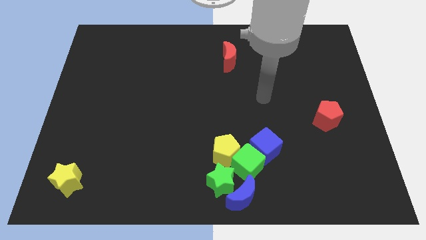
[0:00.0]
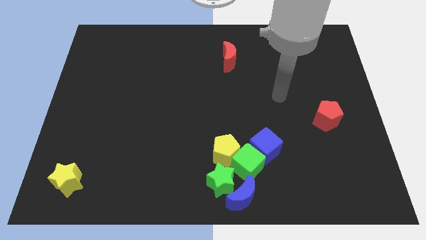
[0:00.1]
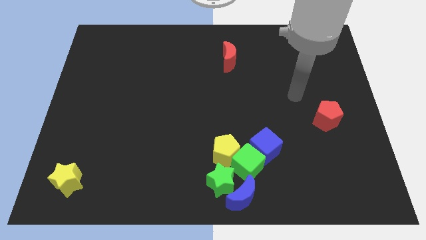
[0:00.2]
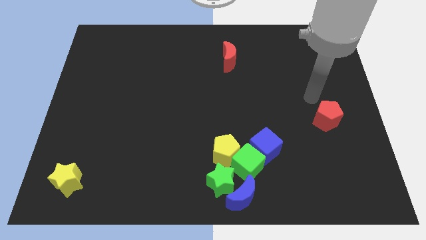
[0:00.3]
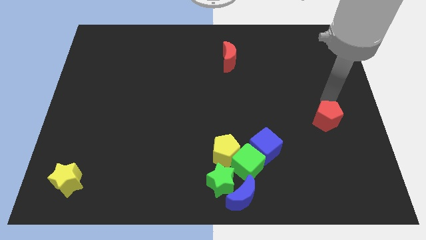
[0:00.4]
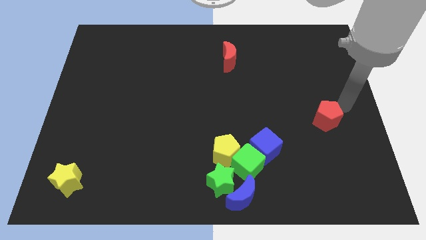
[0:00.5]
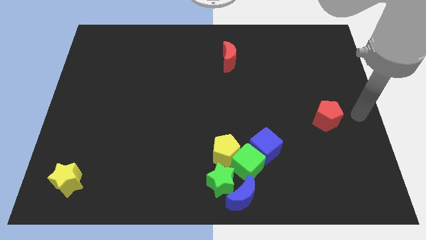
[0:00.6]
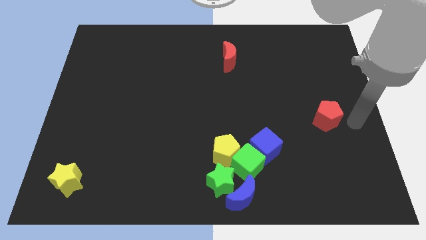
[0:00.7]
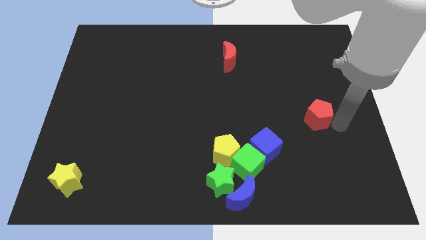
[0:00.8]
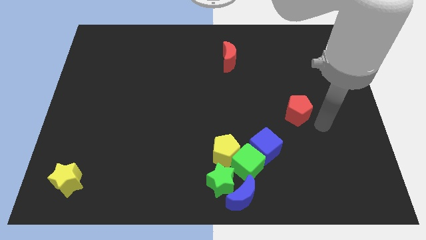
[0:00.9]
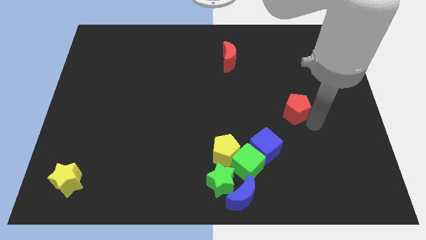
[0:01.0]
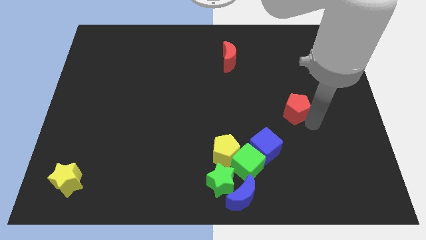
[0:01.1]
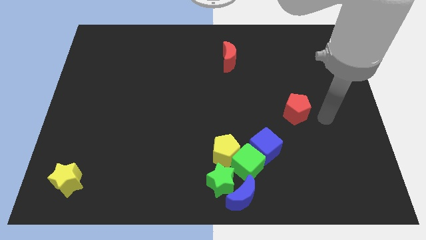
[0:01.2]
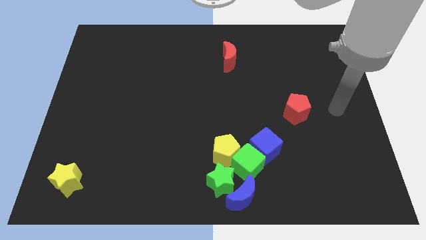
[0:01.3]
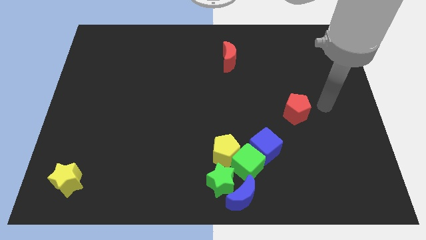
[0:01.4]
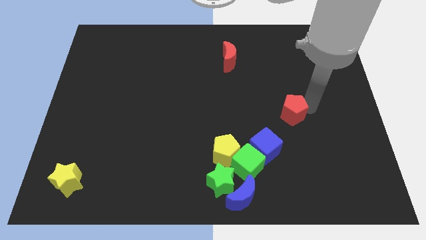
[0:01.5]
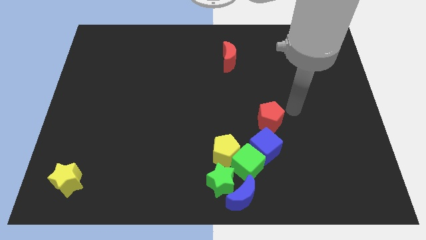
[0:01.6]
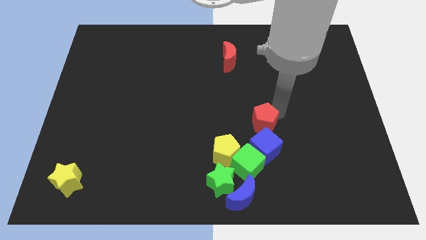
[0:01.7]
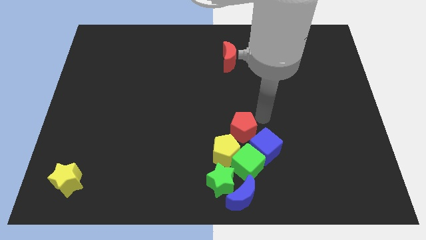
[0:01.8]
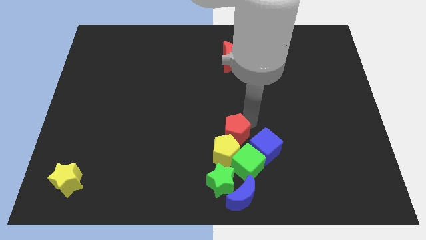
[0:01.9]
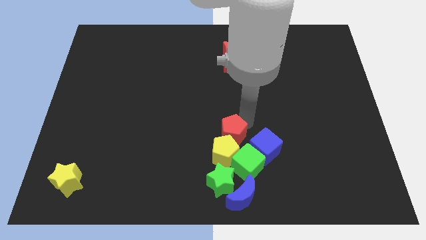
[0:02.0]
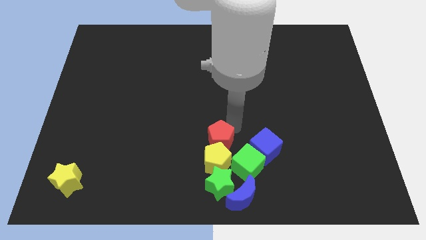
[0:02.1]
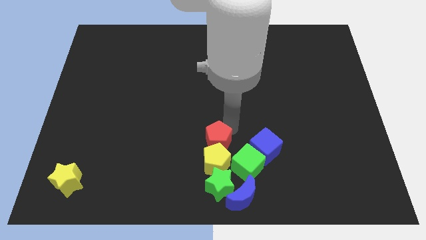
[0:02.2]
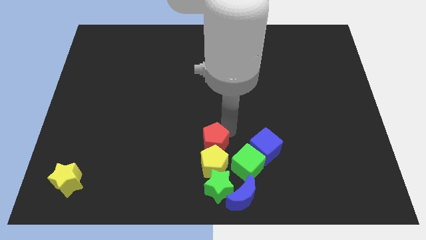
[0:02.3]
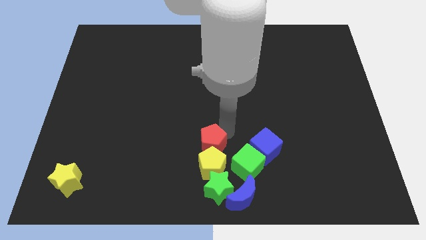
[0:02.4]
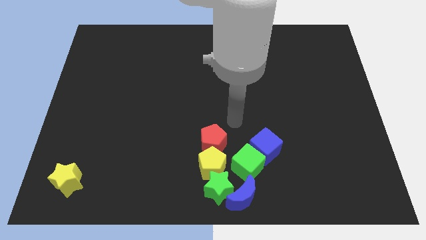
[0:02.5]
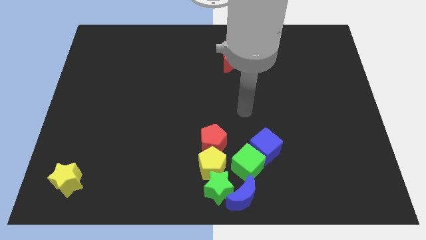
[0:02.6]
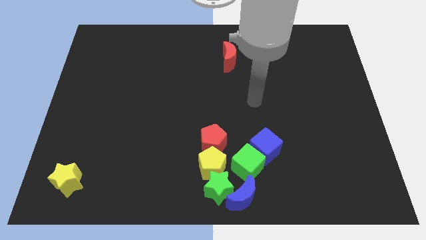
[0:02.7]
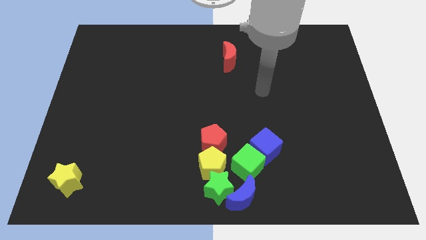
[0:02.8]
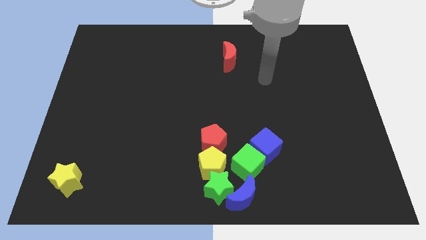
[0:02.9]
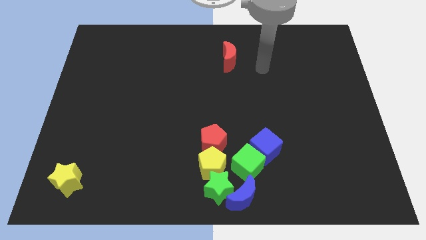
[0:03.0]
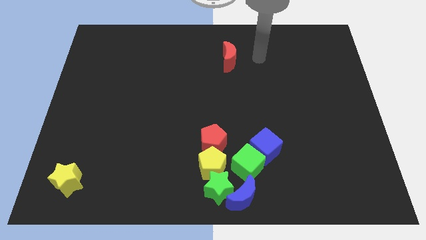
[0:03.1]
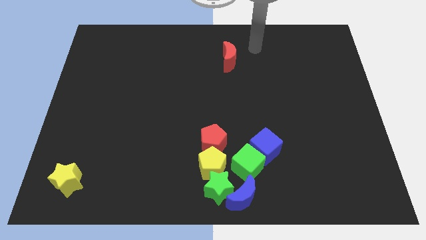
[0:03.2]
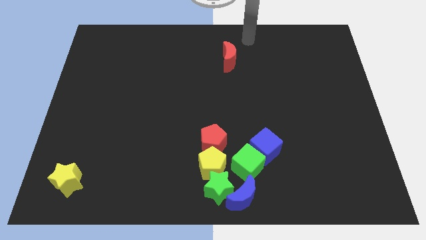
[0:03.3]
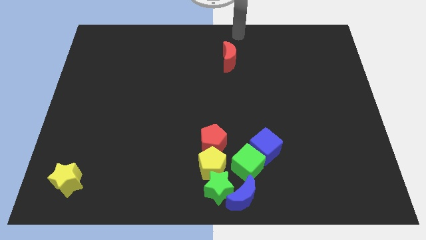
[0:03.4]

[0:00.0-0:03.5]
move red pentagon to the top side of the yellow pentagon

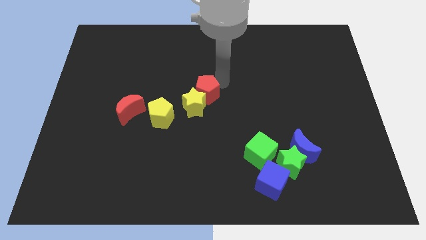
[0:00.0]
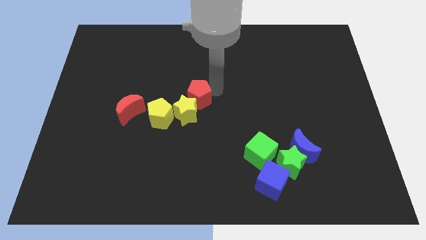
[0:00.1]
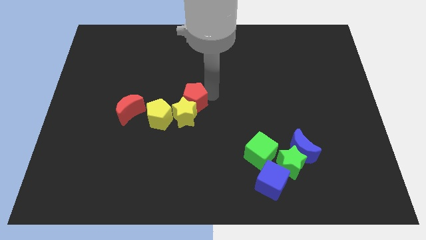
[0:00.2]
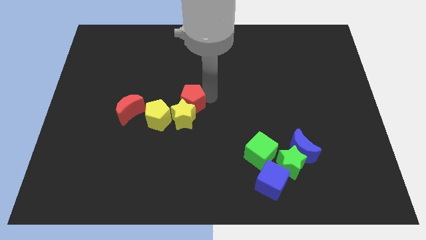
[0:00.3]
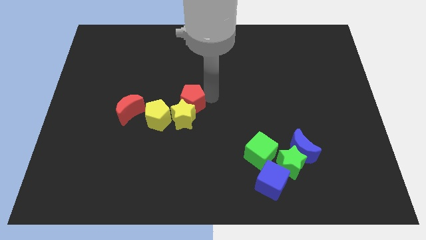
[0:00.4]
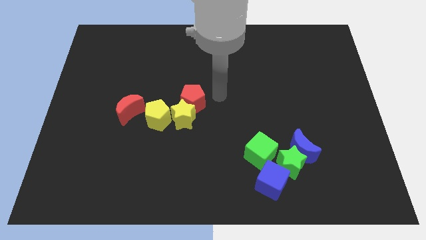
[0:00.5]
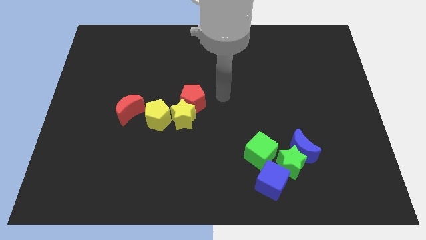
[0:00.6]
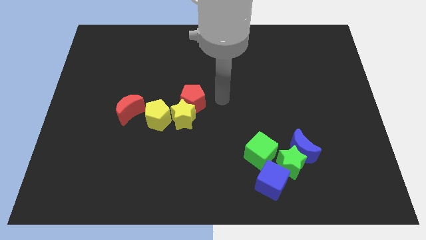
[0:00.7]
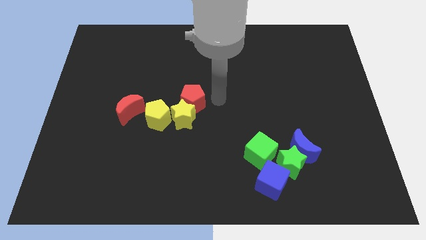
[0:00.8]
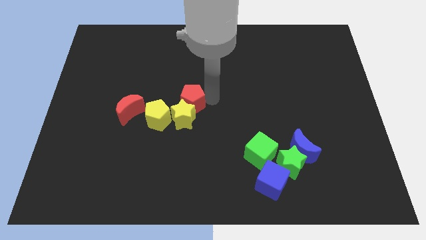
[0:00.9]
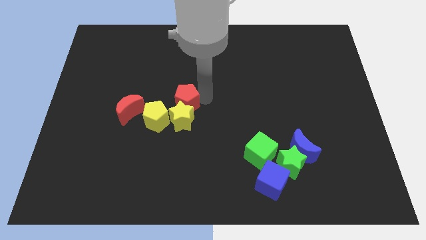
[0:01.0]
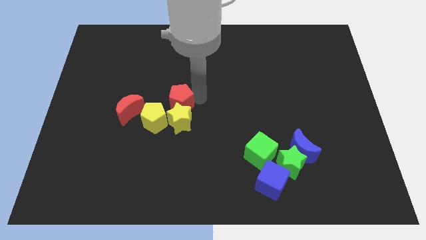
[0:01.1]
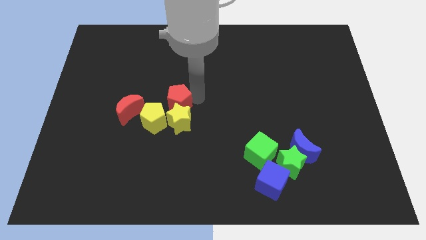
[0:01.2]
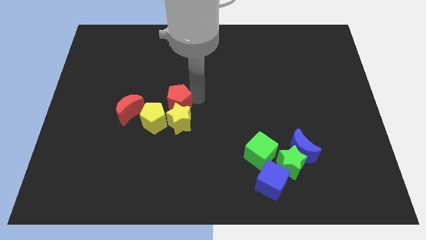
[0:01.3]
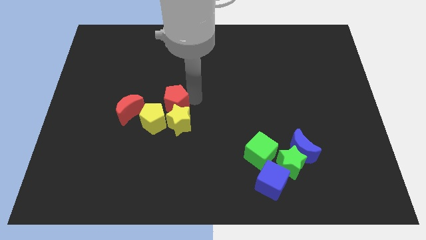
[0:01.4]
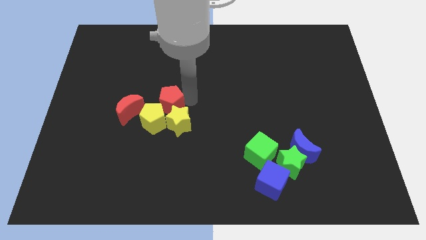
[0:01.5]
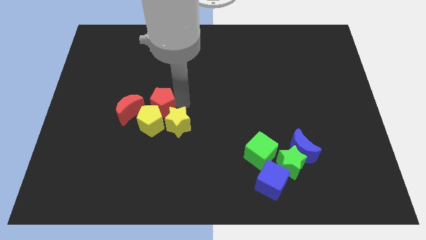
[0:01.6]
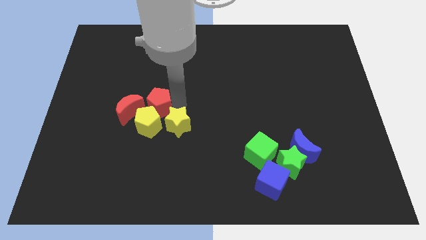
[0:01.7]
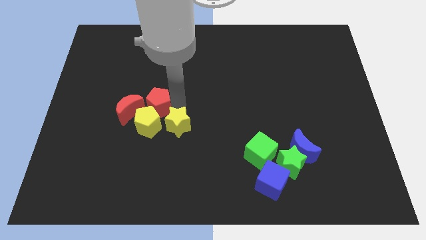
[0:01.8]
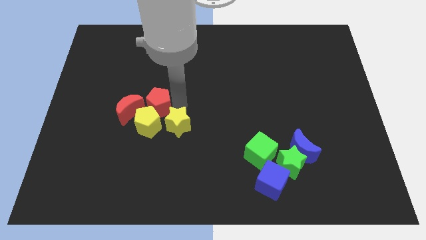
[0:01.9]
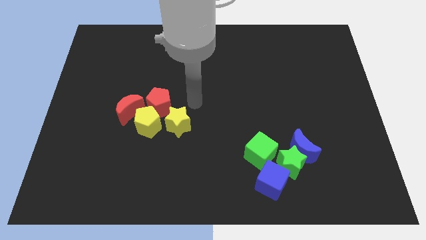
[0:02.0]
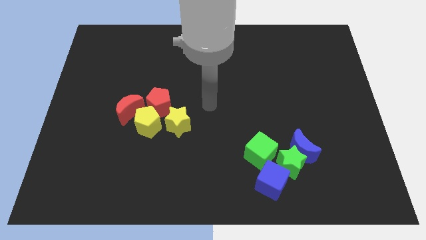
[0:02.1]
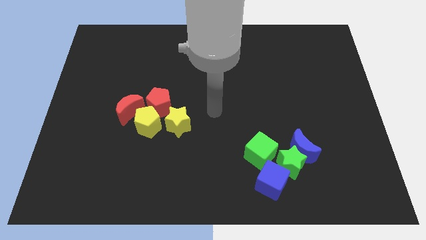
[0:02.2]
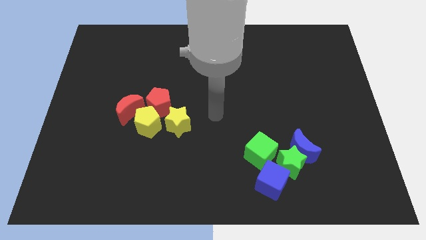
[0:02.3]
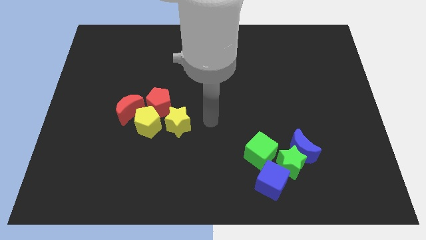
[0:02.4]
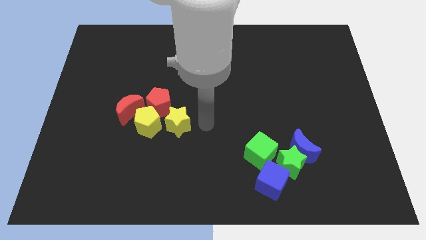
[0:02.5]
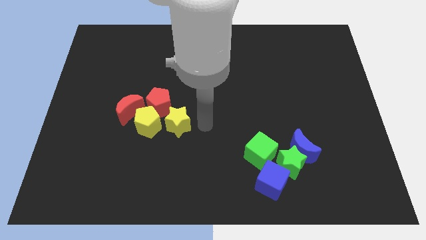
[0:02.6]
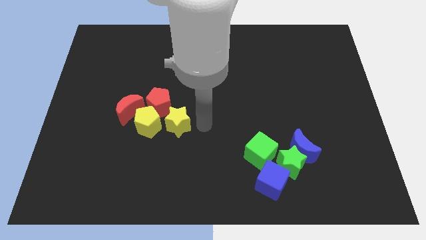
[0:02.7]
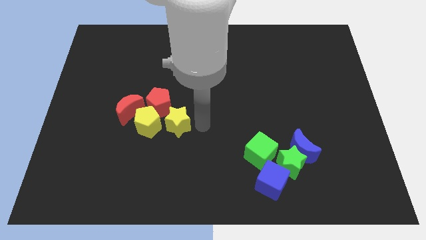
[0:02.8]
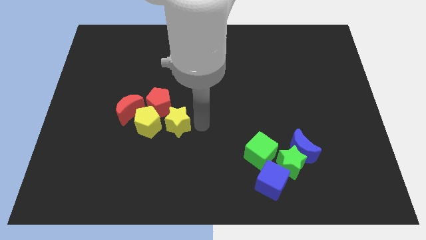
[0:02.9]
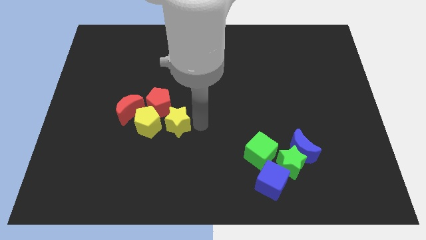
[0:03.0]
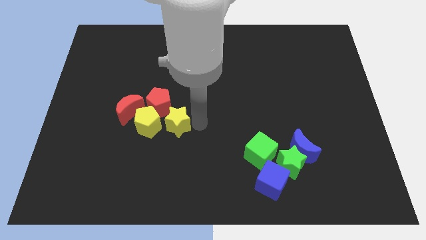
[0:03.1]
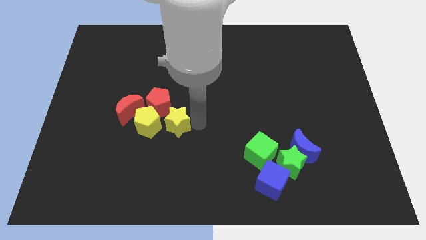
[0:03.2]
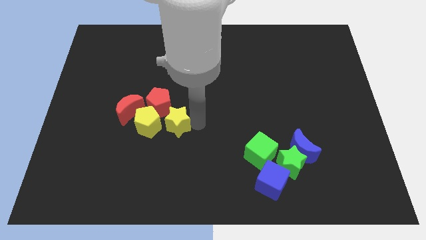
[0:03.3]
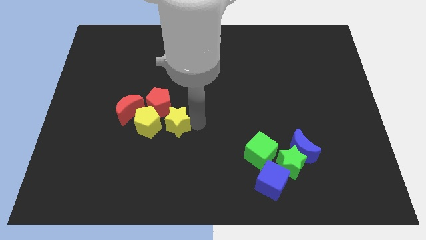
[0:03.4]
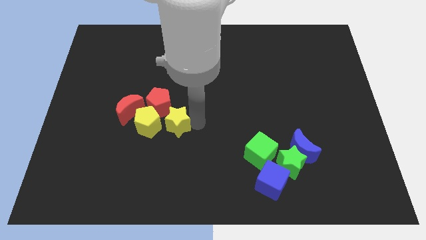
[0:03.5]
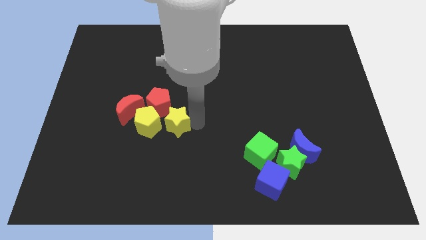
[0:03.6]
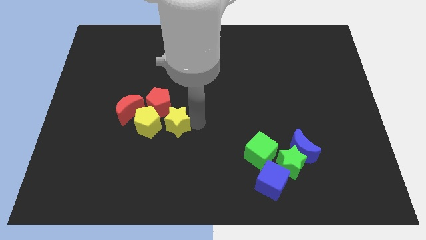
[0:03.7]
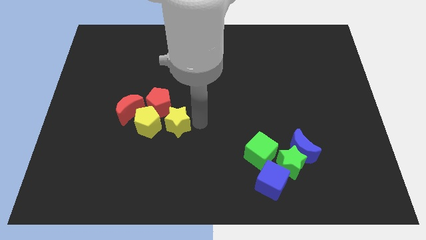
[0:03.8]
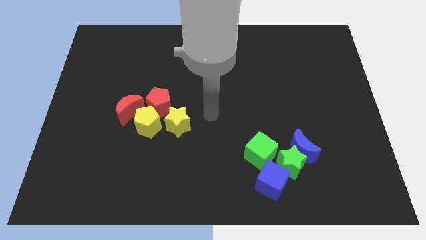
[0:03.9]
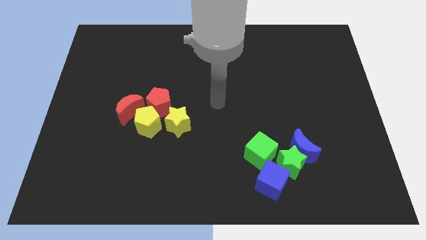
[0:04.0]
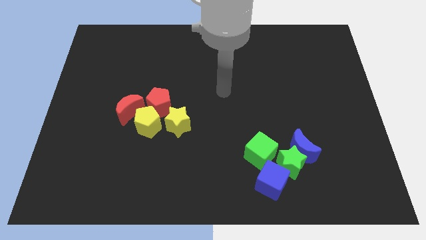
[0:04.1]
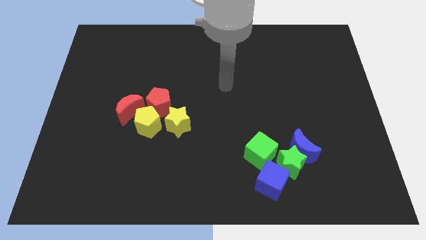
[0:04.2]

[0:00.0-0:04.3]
put the red blocks diagonal to the yellow blocks

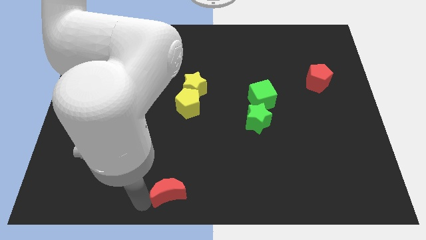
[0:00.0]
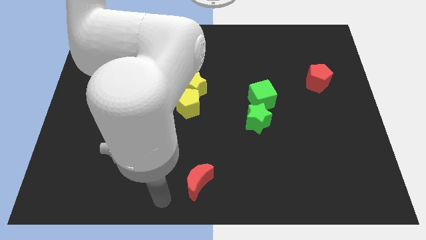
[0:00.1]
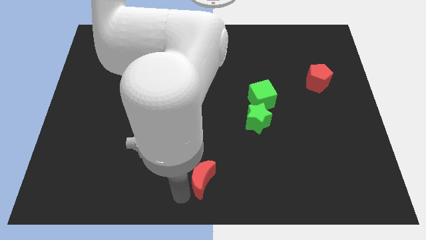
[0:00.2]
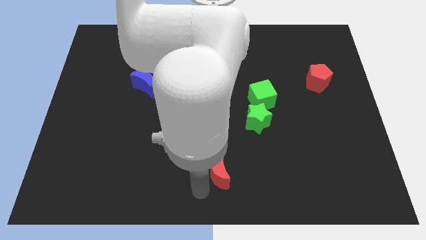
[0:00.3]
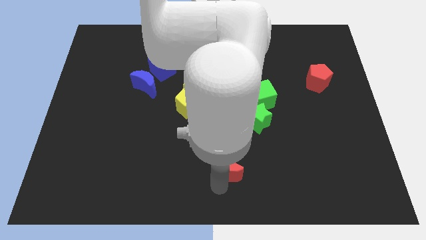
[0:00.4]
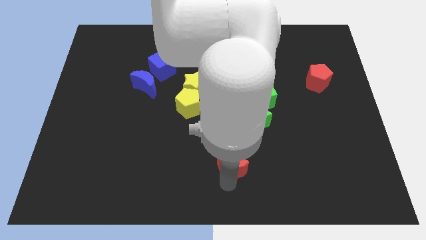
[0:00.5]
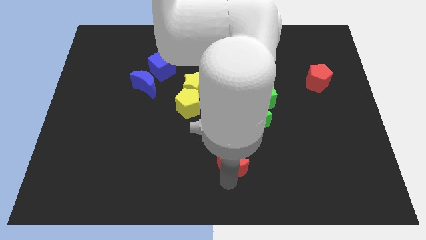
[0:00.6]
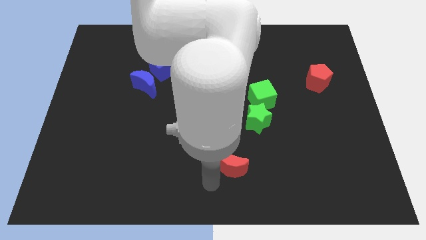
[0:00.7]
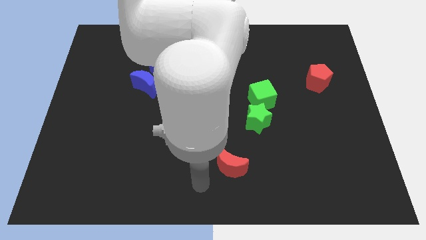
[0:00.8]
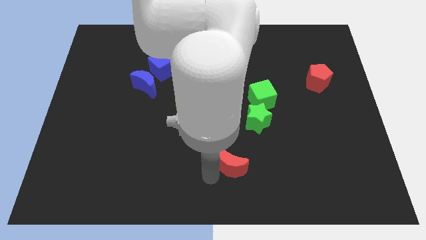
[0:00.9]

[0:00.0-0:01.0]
push the red moon towards the green star

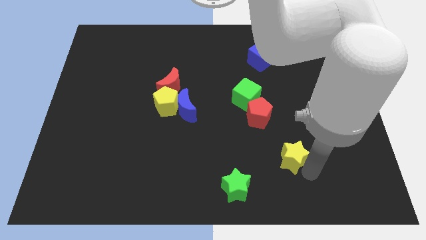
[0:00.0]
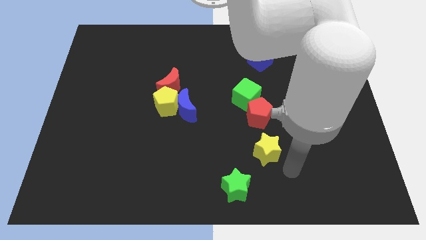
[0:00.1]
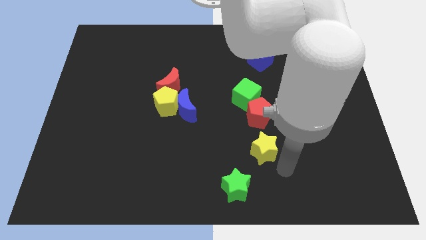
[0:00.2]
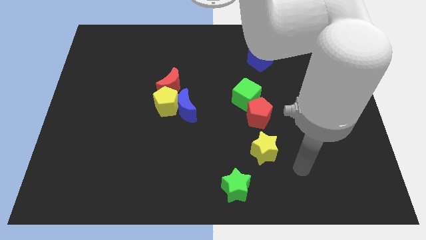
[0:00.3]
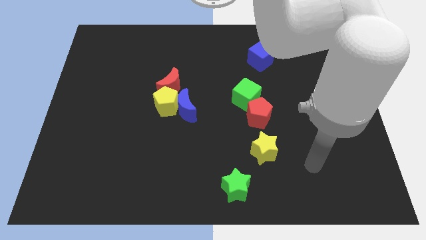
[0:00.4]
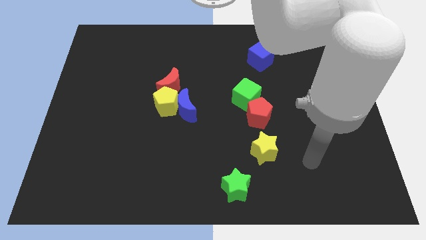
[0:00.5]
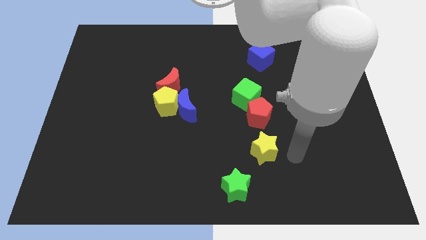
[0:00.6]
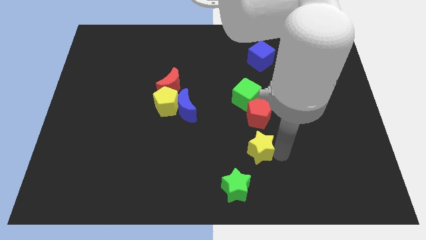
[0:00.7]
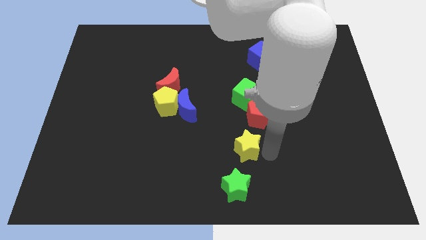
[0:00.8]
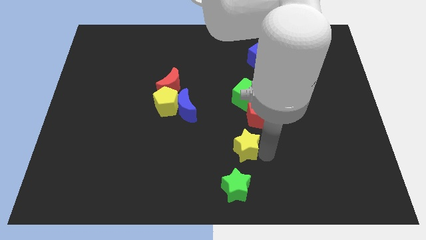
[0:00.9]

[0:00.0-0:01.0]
place yellow star between red pentagon and green star
